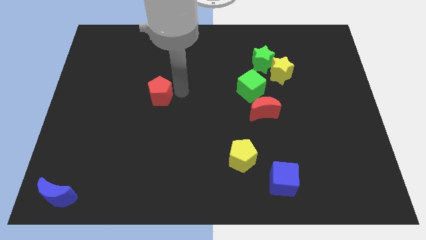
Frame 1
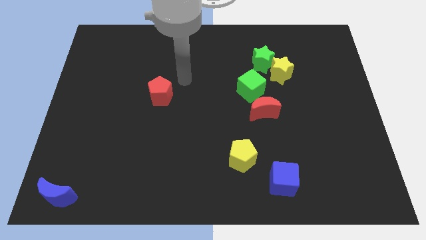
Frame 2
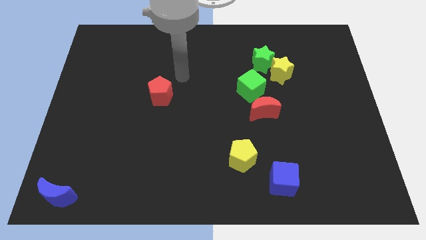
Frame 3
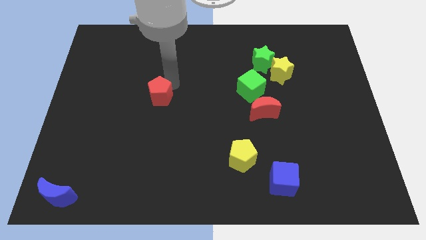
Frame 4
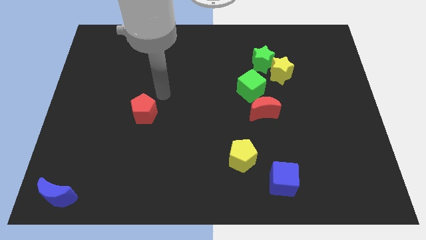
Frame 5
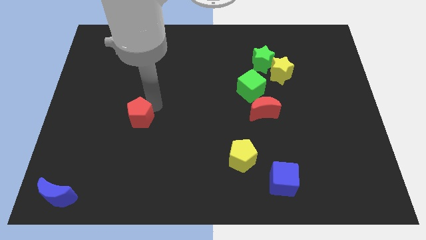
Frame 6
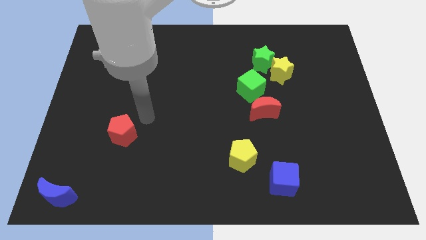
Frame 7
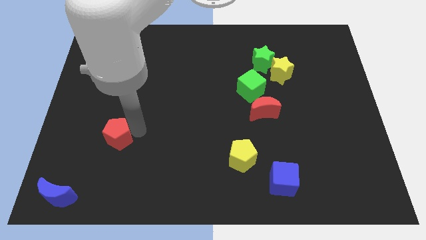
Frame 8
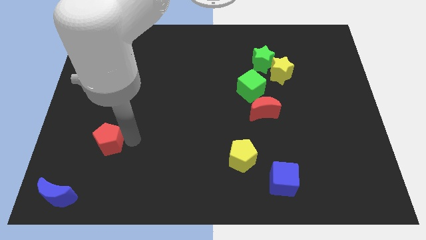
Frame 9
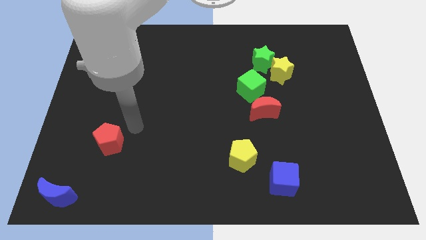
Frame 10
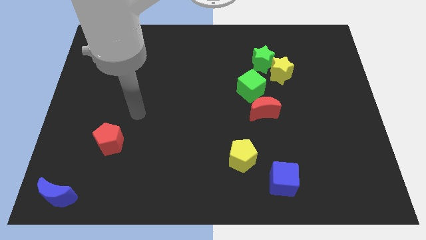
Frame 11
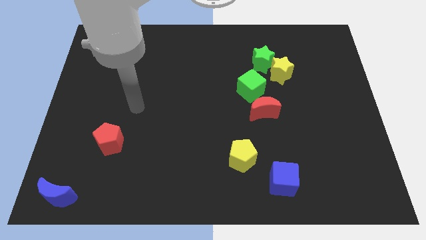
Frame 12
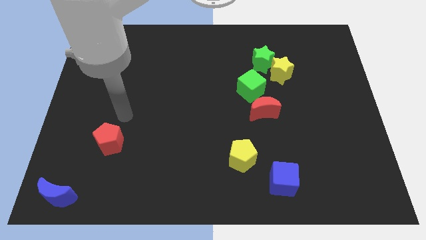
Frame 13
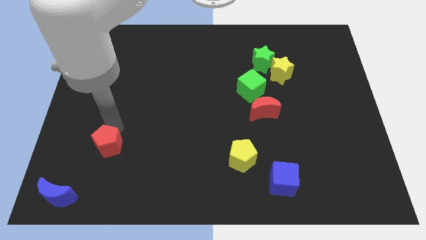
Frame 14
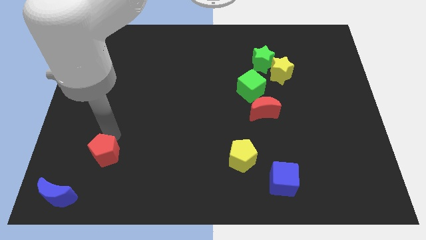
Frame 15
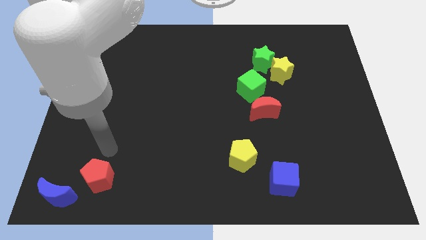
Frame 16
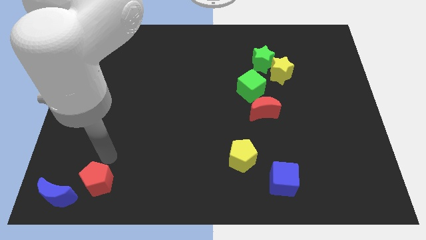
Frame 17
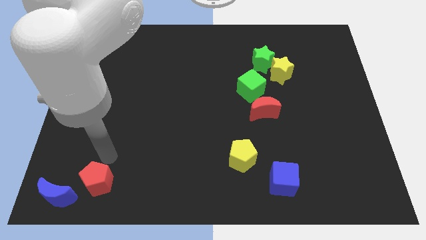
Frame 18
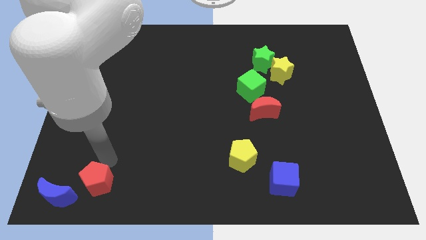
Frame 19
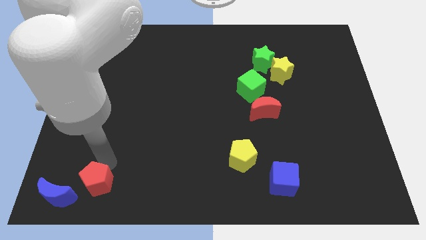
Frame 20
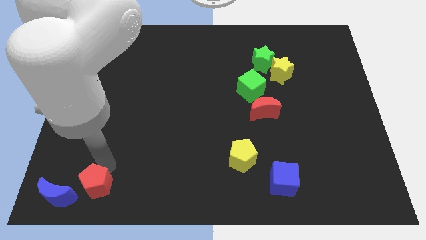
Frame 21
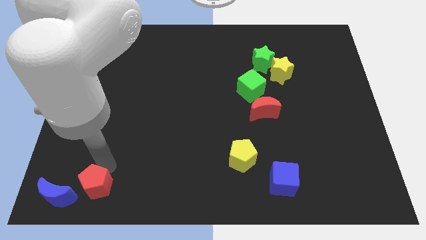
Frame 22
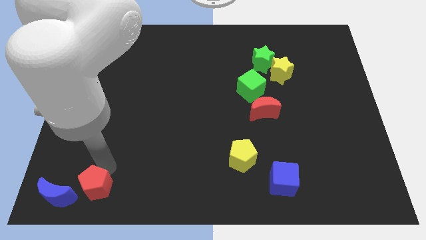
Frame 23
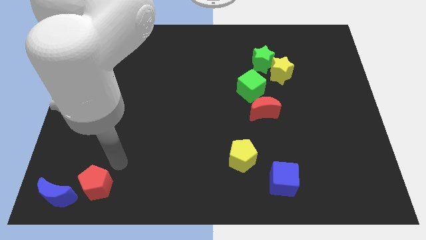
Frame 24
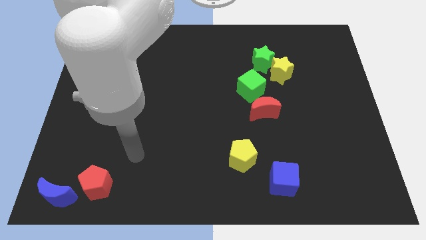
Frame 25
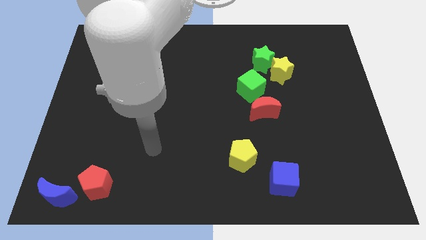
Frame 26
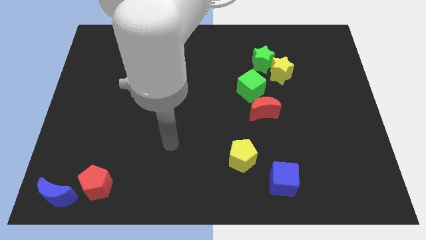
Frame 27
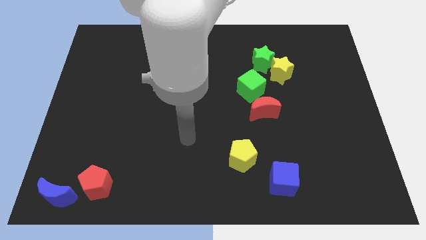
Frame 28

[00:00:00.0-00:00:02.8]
place red pentagon close to blue moon

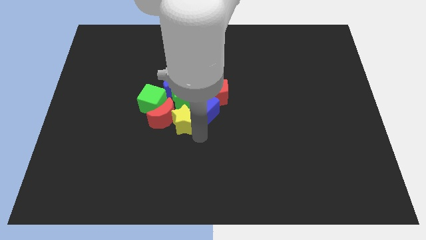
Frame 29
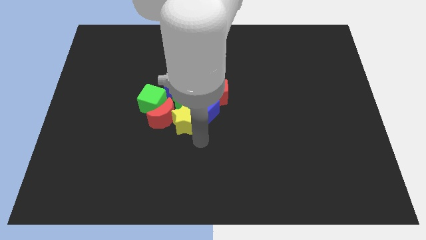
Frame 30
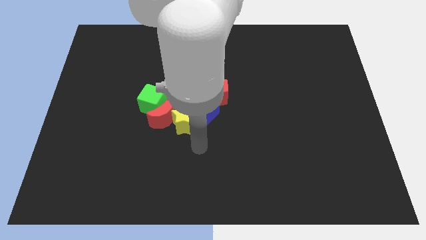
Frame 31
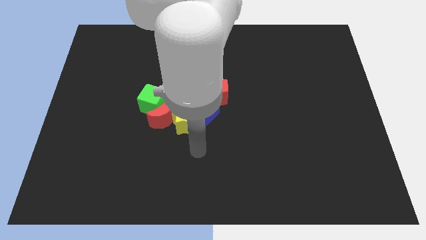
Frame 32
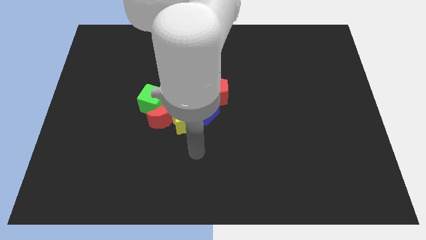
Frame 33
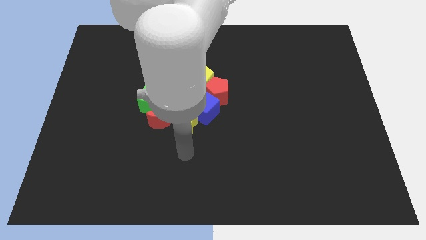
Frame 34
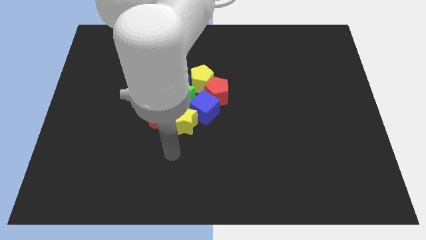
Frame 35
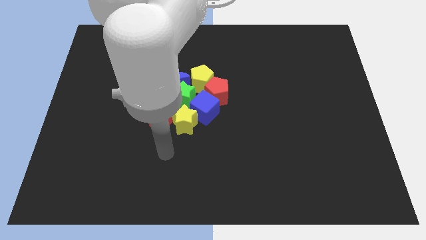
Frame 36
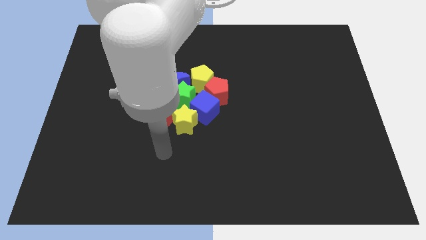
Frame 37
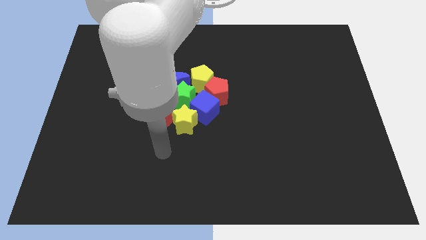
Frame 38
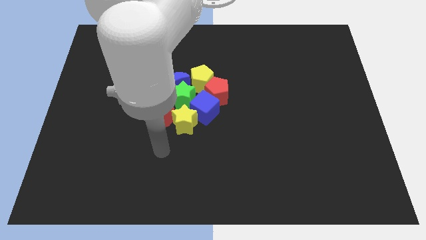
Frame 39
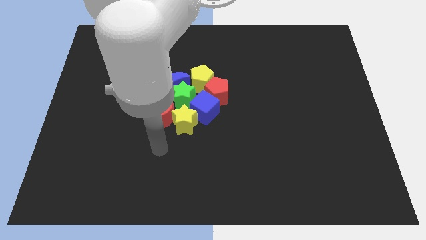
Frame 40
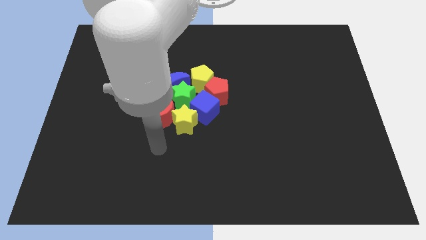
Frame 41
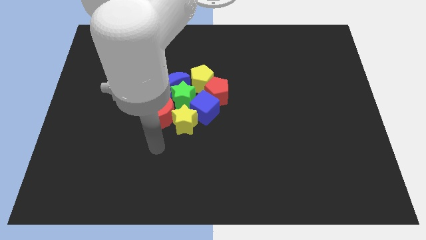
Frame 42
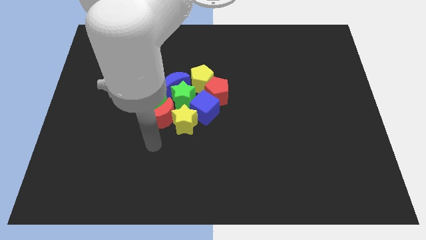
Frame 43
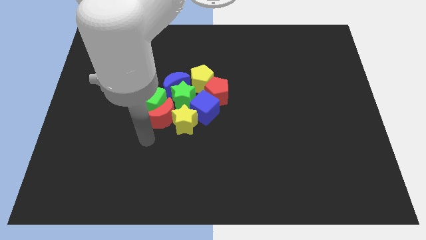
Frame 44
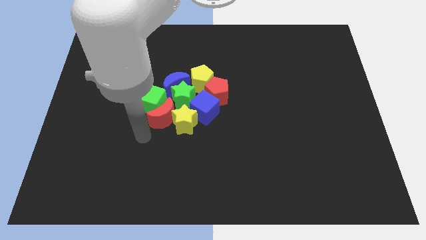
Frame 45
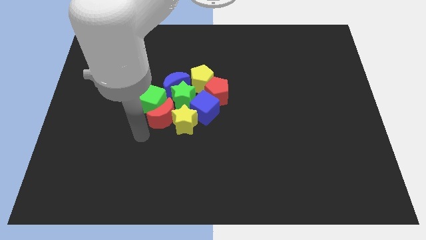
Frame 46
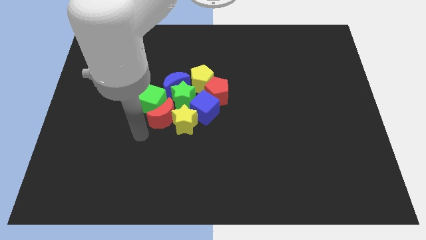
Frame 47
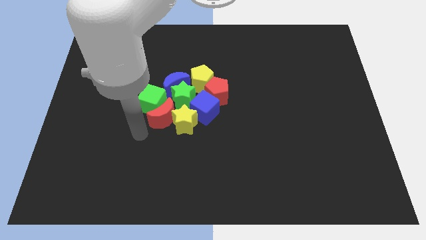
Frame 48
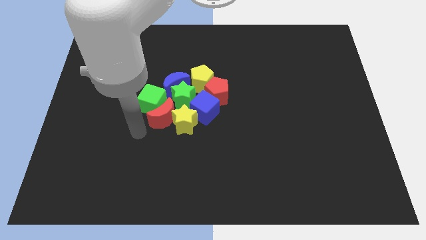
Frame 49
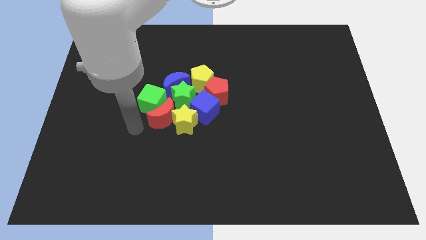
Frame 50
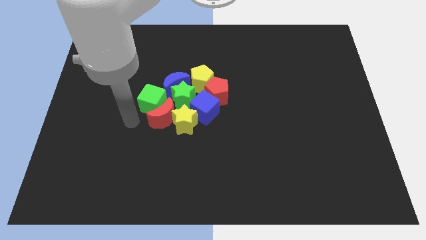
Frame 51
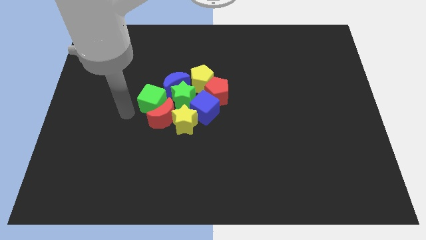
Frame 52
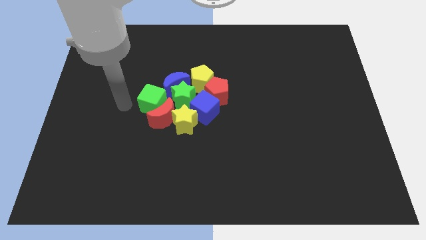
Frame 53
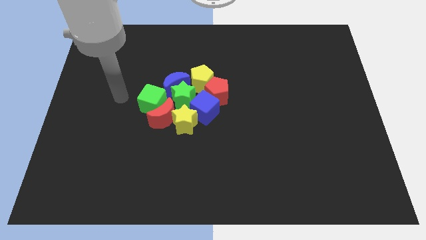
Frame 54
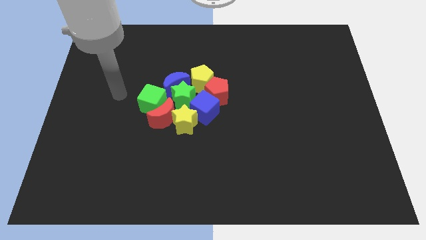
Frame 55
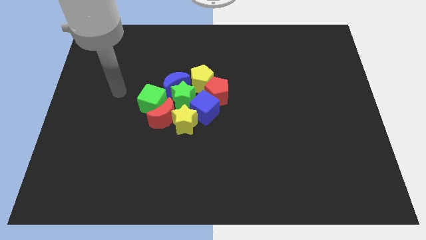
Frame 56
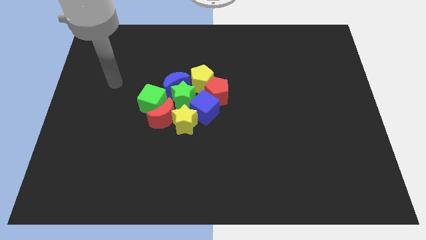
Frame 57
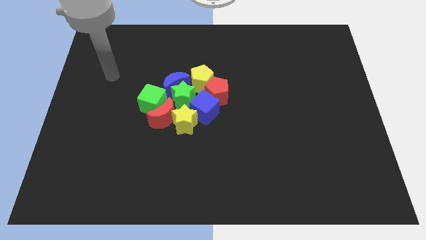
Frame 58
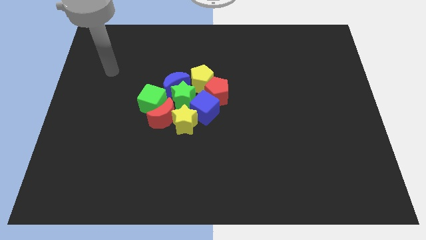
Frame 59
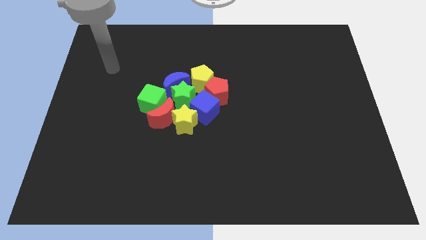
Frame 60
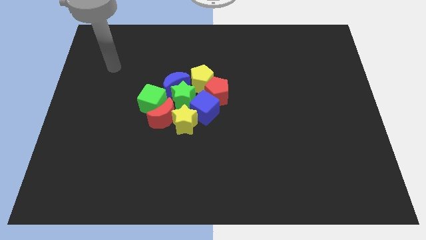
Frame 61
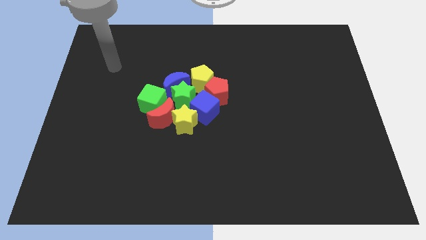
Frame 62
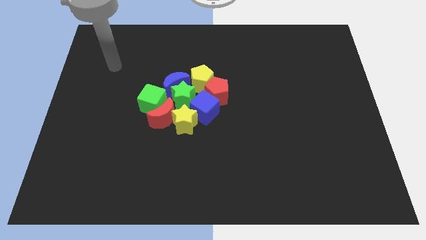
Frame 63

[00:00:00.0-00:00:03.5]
move the arm away from the yellow star

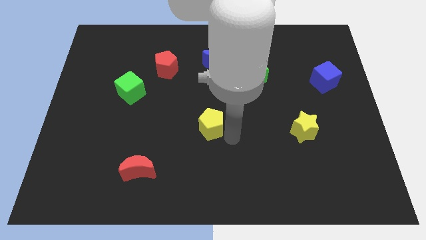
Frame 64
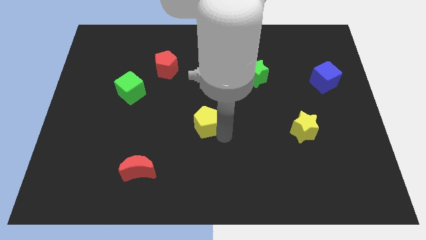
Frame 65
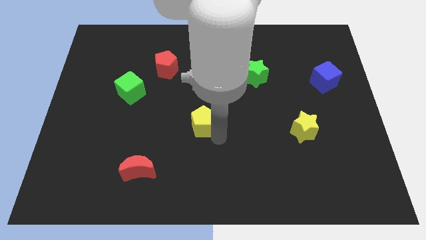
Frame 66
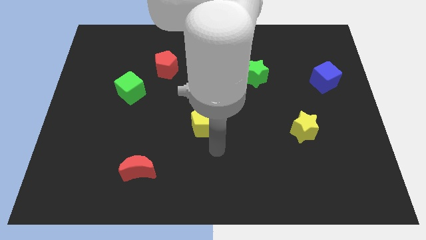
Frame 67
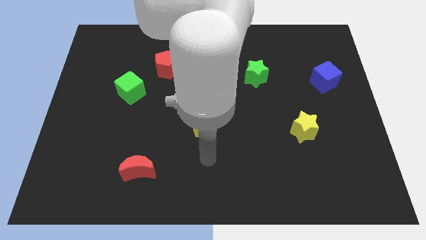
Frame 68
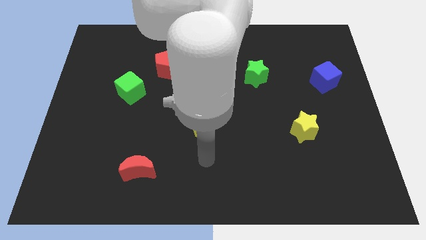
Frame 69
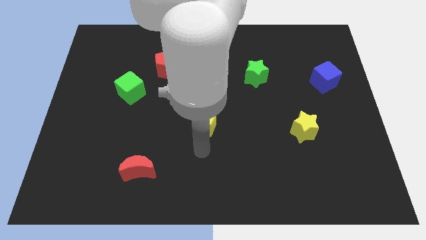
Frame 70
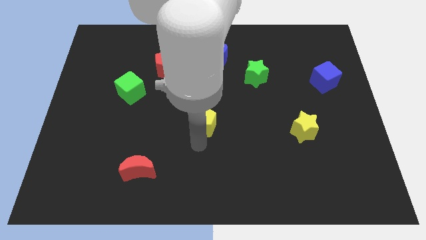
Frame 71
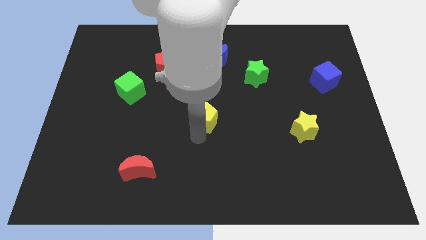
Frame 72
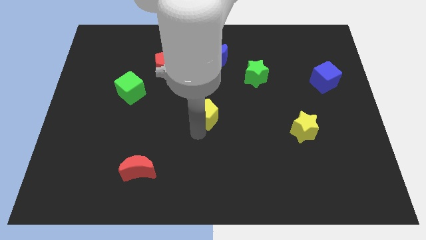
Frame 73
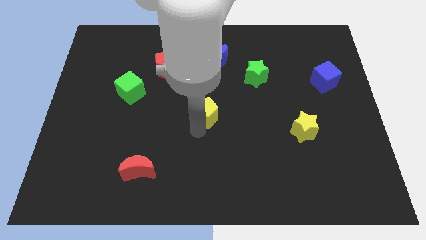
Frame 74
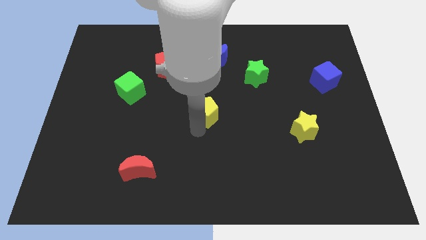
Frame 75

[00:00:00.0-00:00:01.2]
push the yellow pentagon to the center of the board

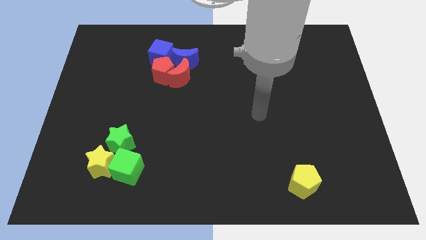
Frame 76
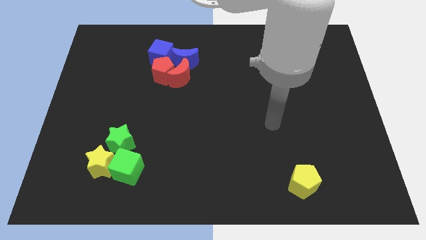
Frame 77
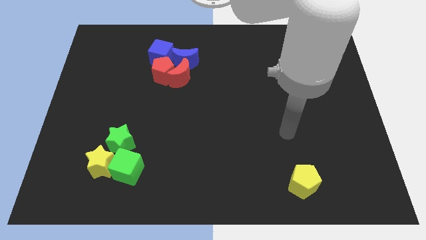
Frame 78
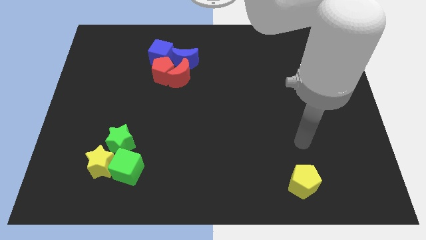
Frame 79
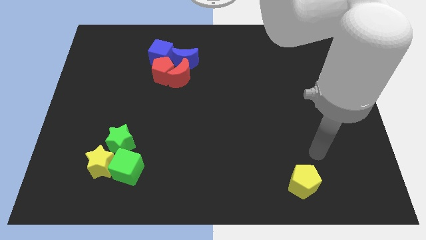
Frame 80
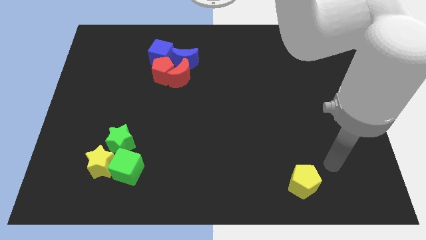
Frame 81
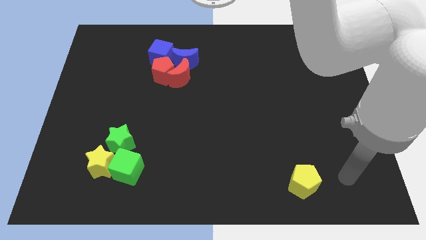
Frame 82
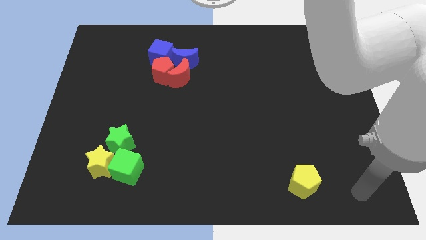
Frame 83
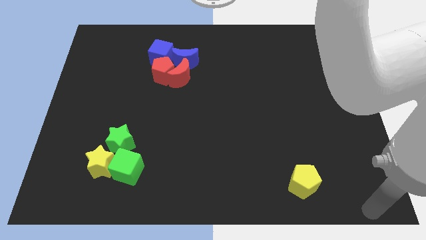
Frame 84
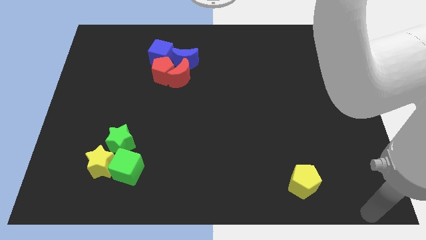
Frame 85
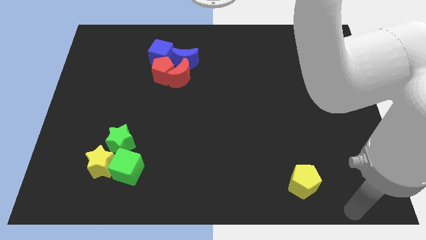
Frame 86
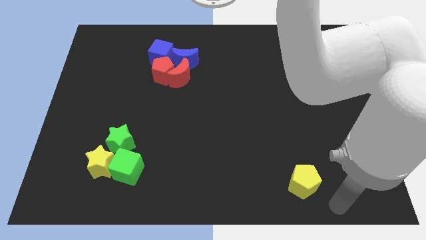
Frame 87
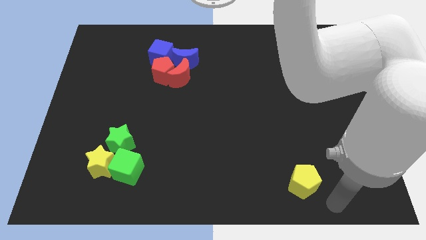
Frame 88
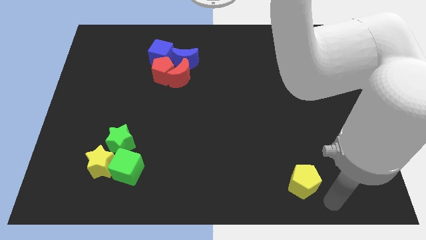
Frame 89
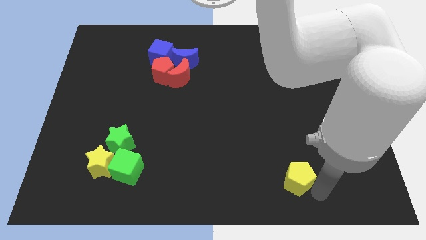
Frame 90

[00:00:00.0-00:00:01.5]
move the arm towards the yellow pentagon
